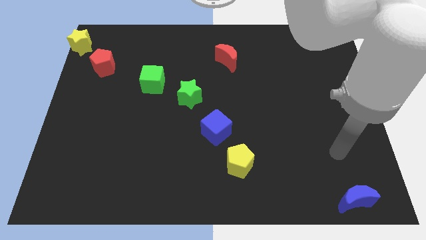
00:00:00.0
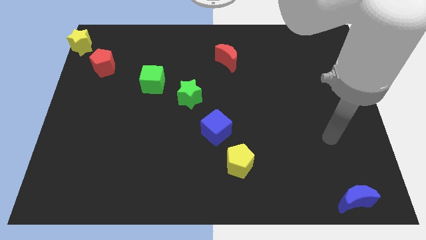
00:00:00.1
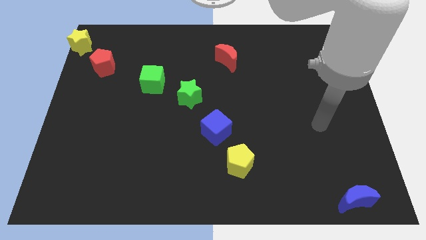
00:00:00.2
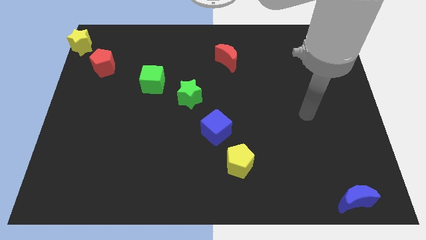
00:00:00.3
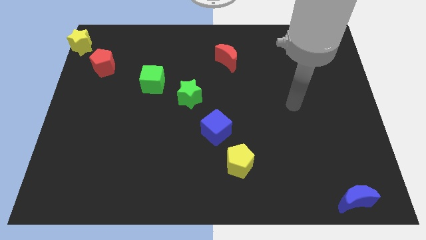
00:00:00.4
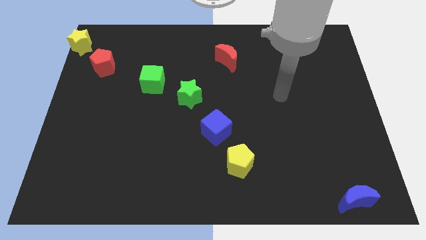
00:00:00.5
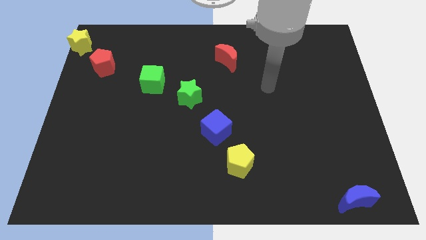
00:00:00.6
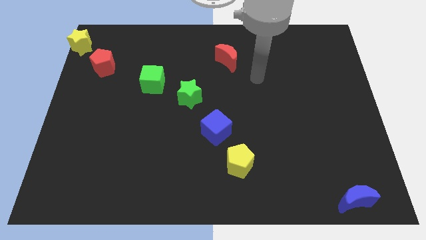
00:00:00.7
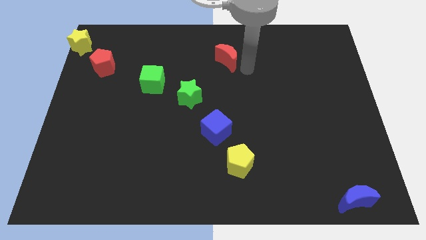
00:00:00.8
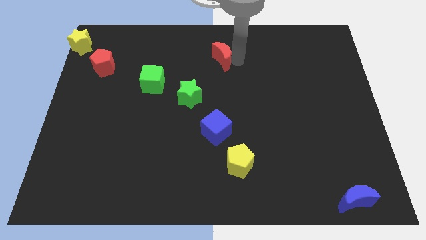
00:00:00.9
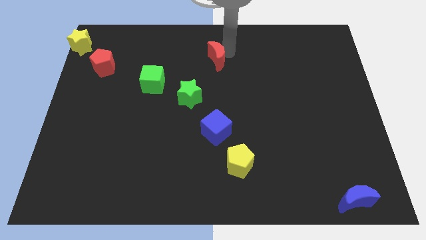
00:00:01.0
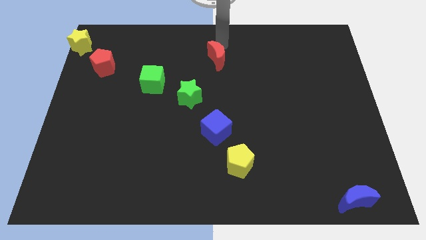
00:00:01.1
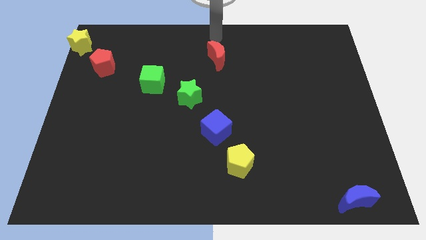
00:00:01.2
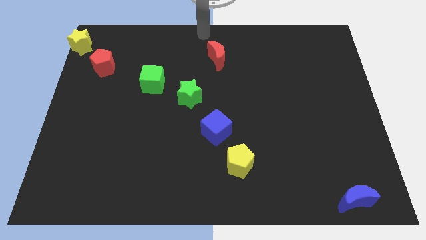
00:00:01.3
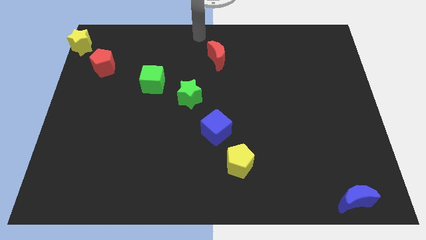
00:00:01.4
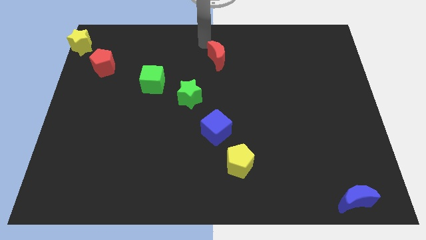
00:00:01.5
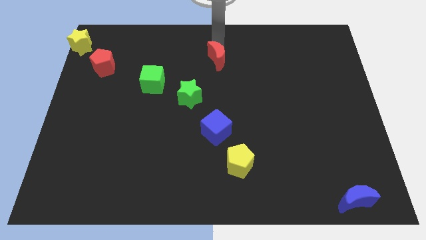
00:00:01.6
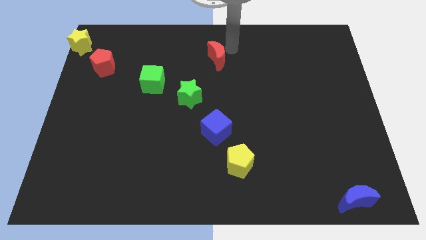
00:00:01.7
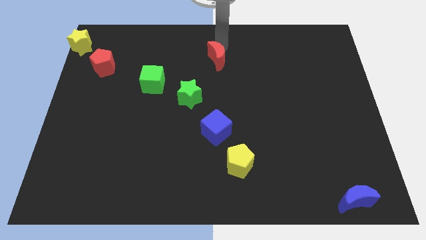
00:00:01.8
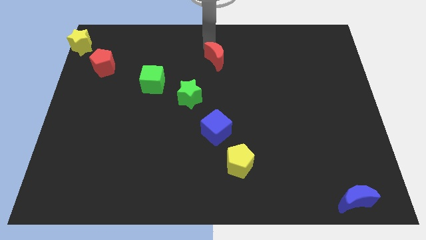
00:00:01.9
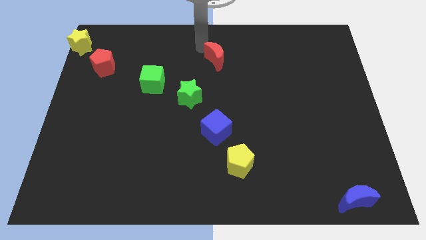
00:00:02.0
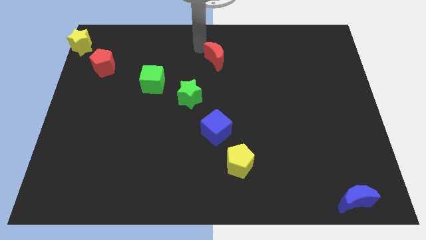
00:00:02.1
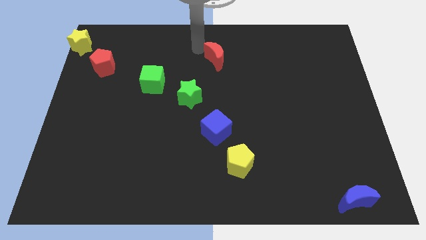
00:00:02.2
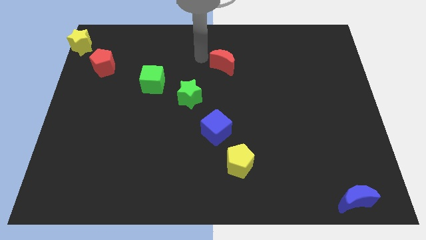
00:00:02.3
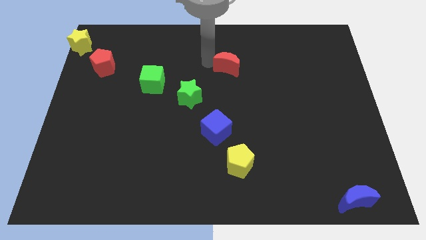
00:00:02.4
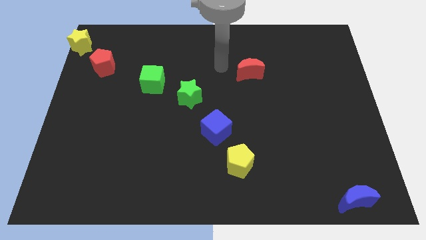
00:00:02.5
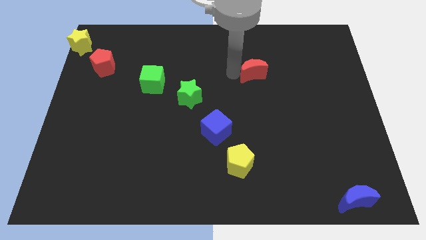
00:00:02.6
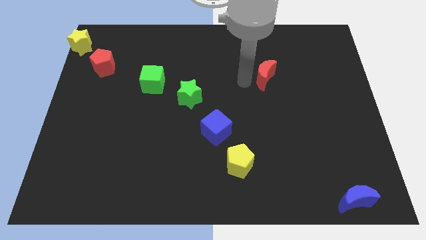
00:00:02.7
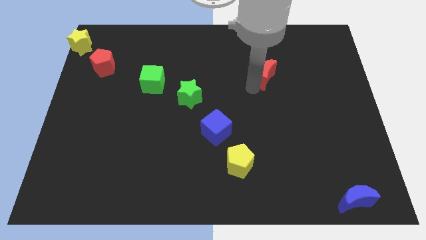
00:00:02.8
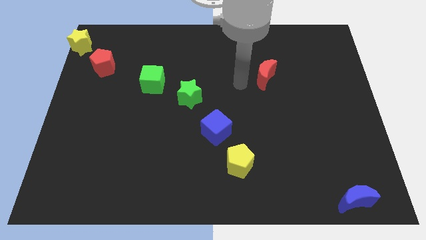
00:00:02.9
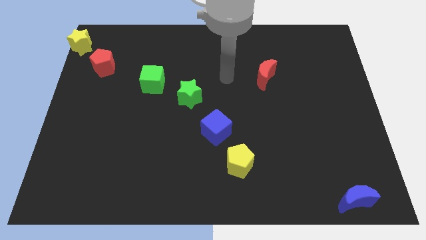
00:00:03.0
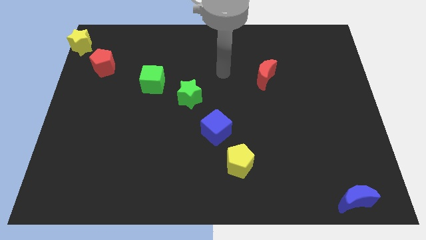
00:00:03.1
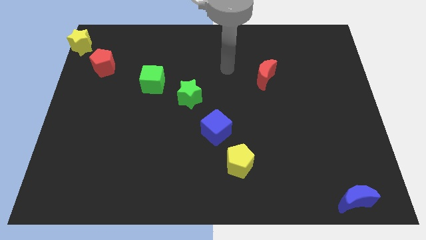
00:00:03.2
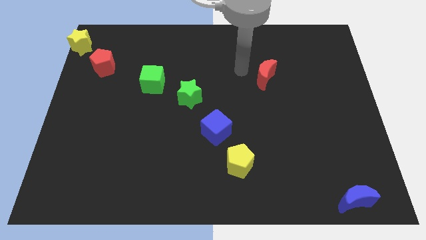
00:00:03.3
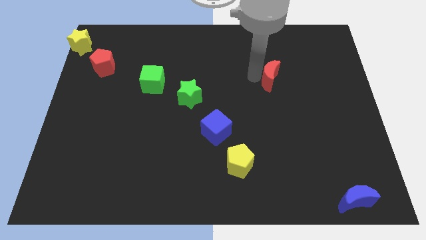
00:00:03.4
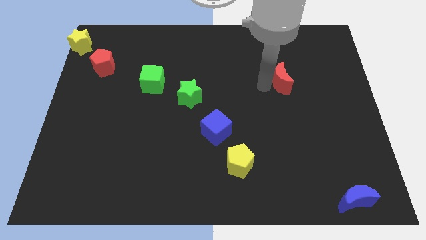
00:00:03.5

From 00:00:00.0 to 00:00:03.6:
move the red moon parallel right to the green cube

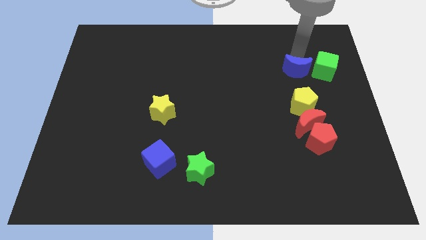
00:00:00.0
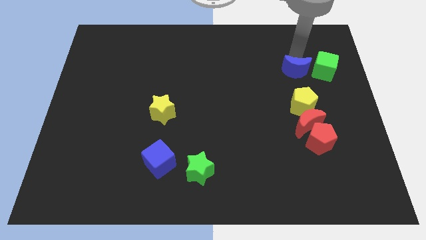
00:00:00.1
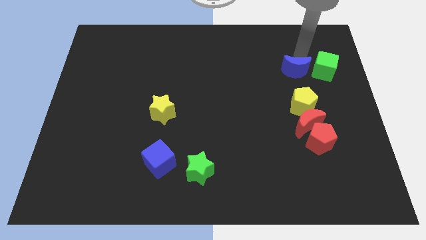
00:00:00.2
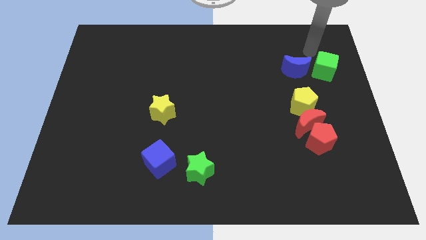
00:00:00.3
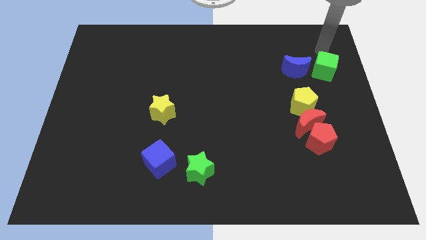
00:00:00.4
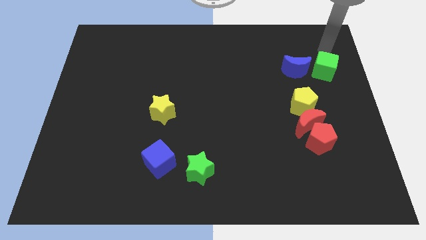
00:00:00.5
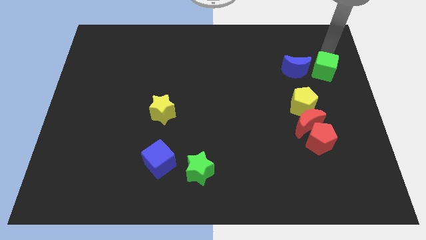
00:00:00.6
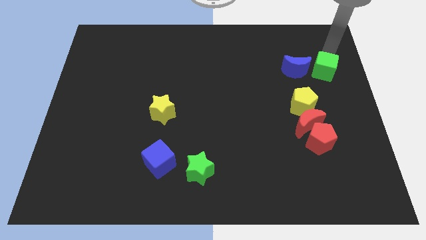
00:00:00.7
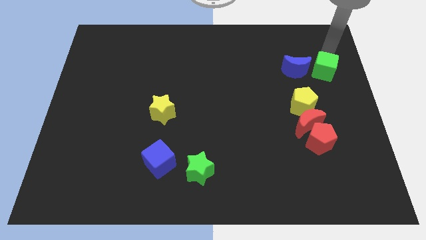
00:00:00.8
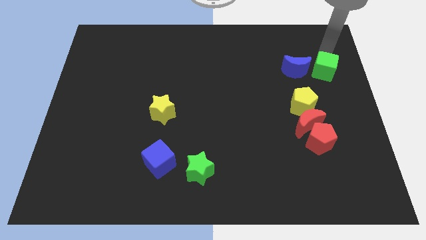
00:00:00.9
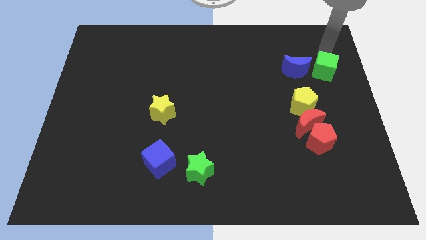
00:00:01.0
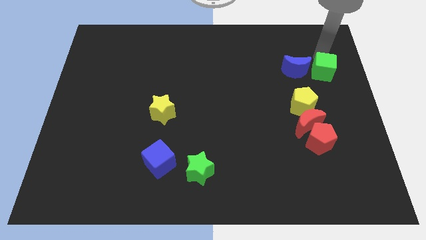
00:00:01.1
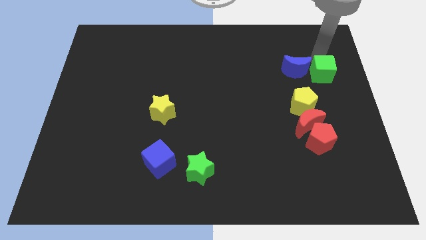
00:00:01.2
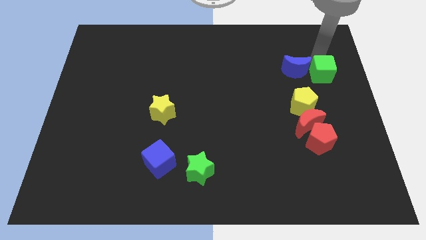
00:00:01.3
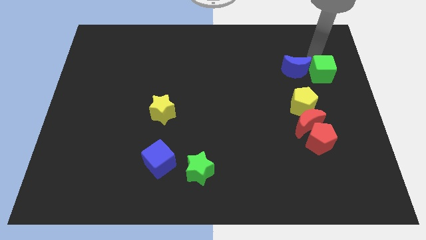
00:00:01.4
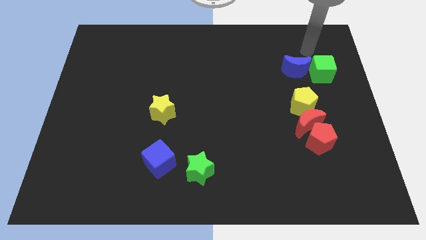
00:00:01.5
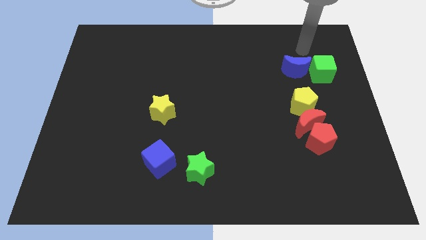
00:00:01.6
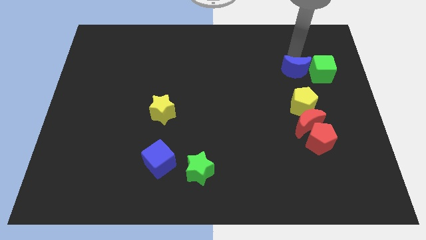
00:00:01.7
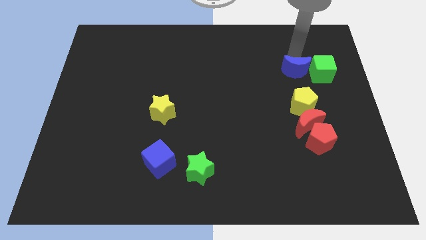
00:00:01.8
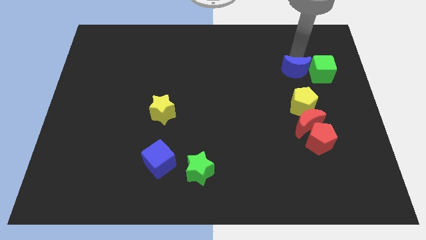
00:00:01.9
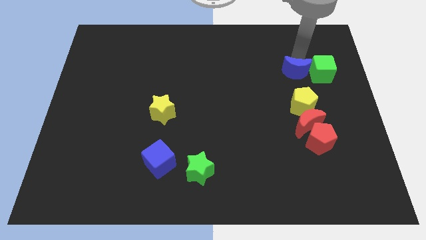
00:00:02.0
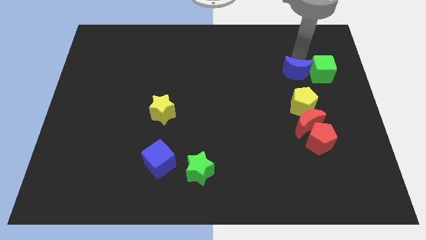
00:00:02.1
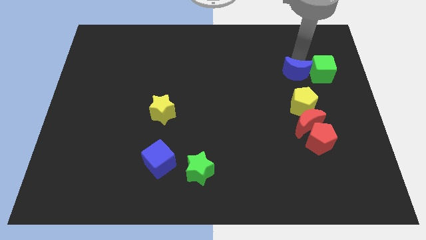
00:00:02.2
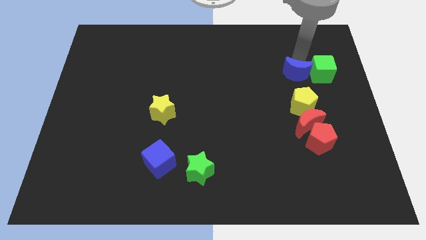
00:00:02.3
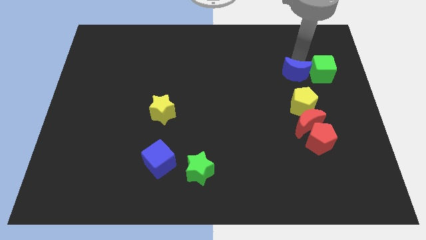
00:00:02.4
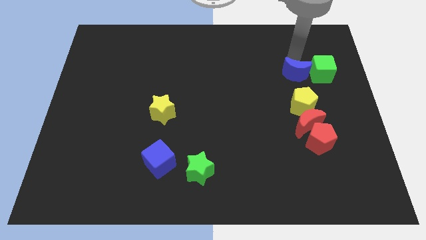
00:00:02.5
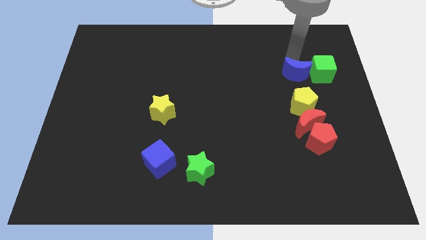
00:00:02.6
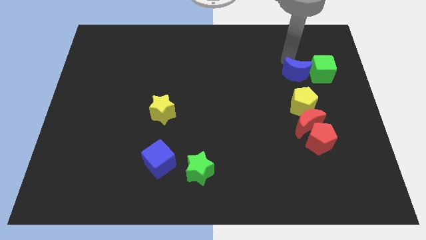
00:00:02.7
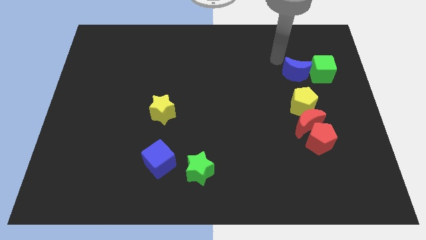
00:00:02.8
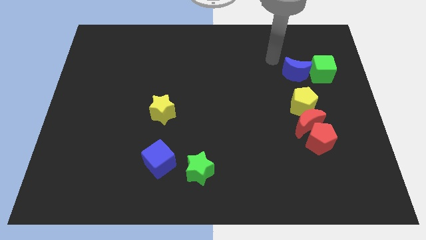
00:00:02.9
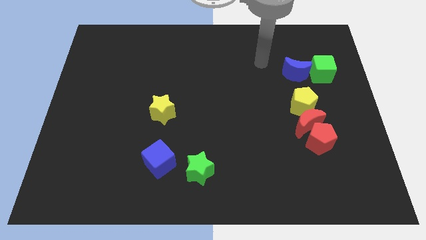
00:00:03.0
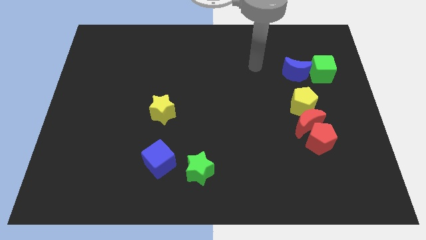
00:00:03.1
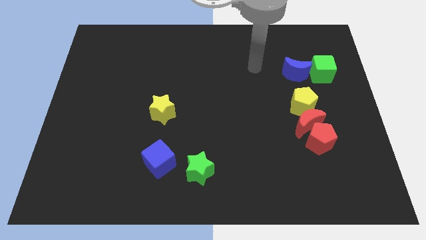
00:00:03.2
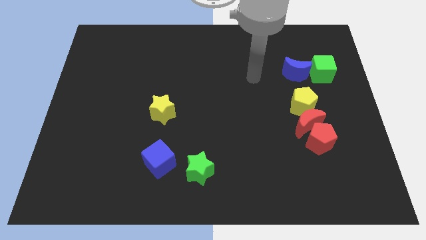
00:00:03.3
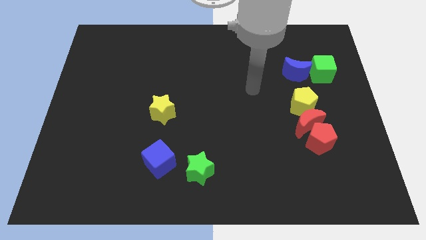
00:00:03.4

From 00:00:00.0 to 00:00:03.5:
slightly move the blue moon and green cube down

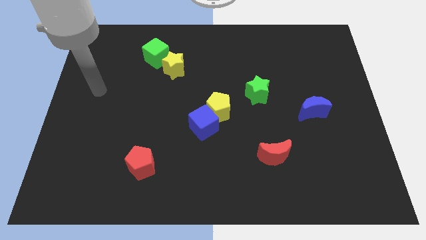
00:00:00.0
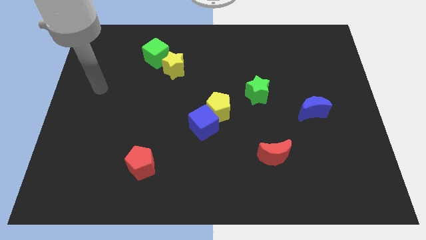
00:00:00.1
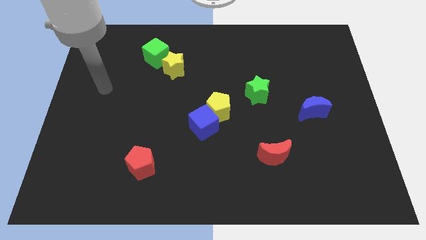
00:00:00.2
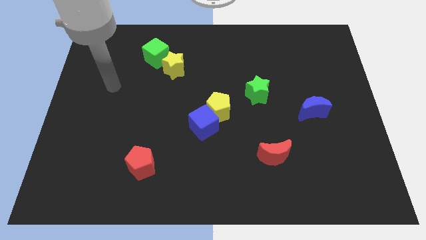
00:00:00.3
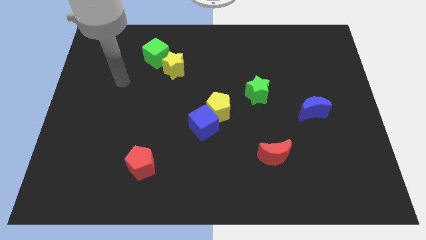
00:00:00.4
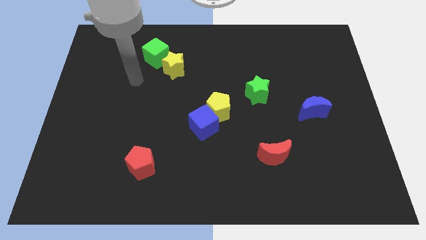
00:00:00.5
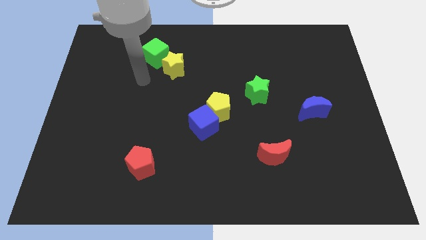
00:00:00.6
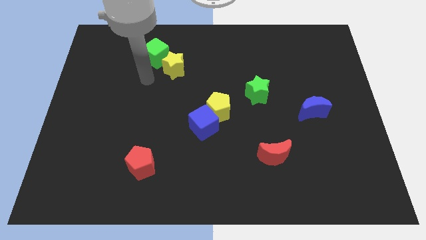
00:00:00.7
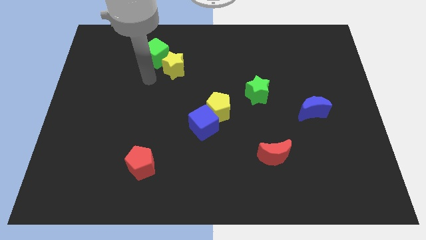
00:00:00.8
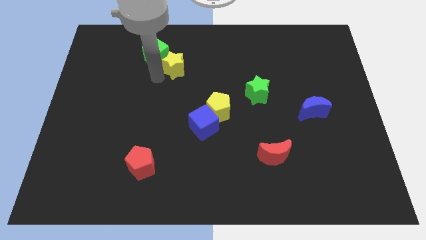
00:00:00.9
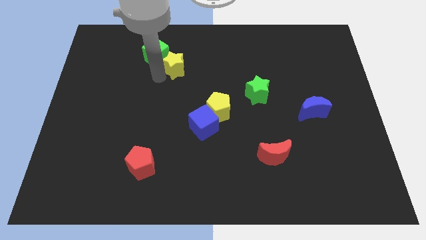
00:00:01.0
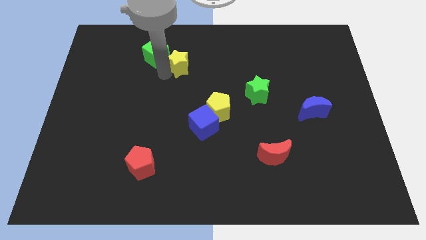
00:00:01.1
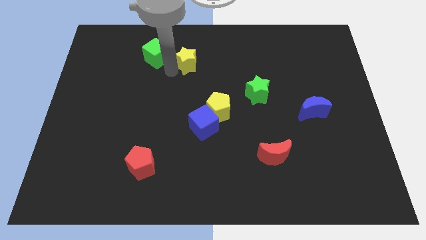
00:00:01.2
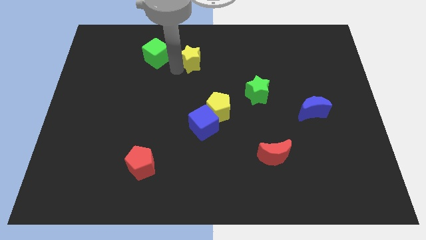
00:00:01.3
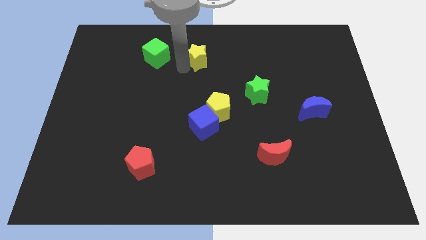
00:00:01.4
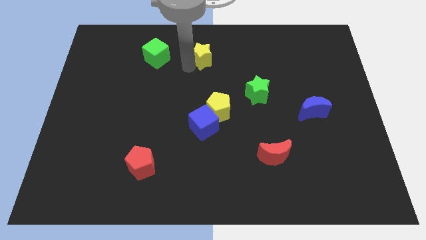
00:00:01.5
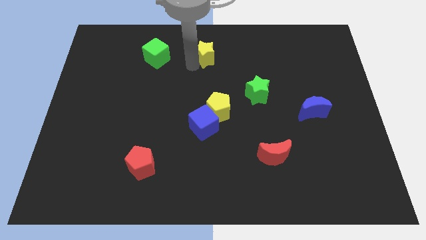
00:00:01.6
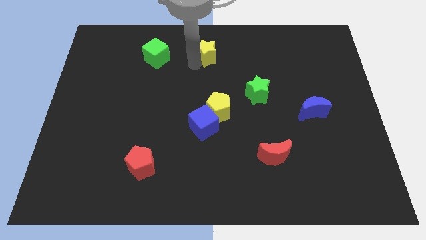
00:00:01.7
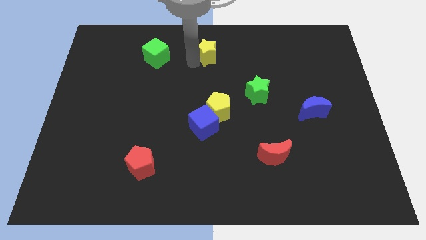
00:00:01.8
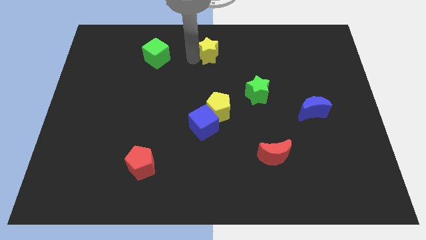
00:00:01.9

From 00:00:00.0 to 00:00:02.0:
separate the yellow star from green cube

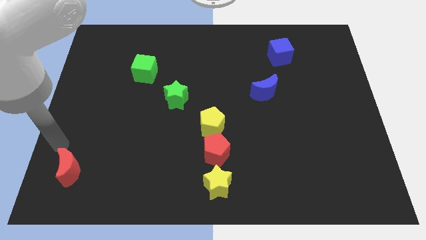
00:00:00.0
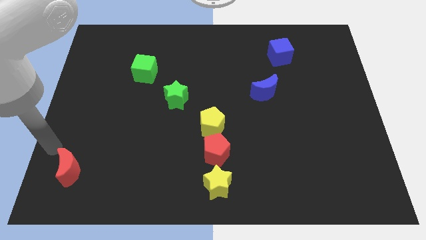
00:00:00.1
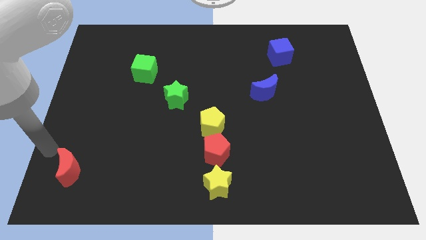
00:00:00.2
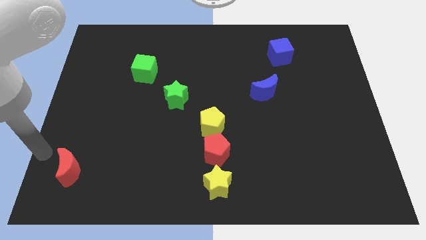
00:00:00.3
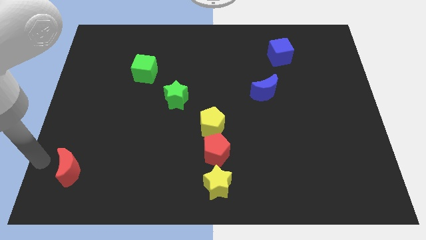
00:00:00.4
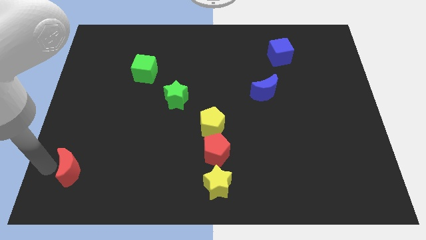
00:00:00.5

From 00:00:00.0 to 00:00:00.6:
place your arm at the left side of the red moon
